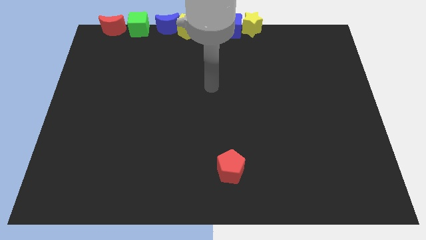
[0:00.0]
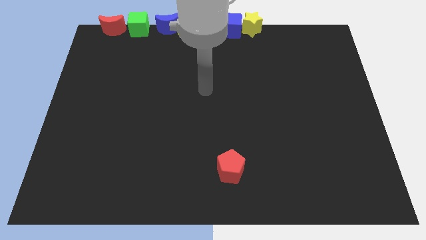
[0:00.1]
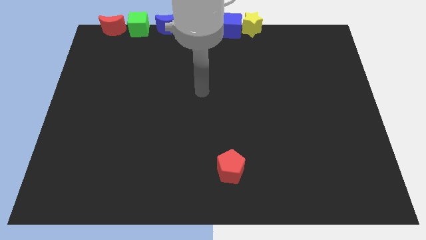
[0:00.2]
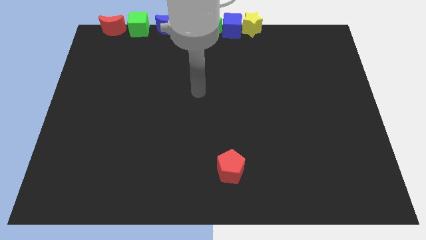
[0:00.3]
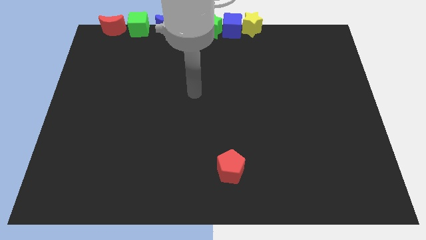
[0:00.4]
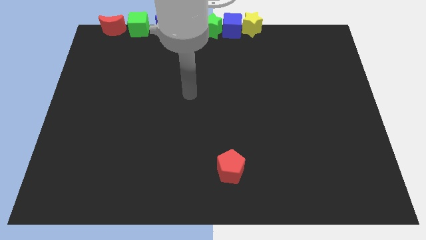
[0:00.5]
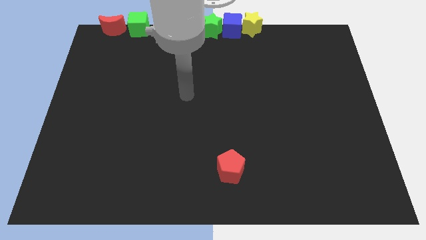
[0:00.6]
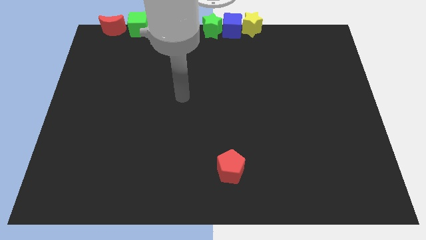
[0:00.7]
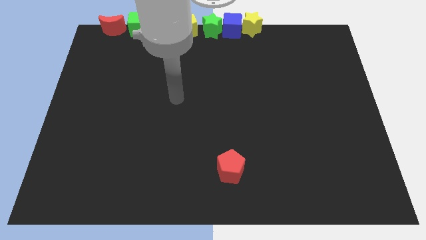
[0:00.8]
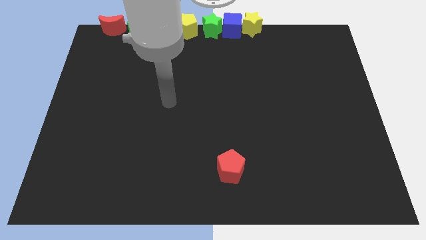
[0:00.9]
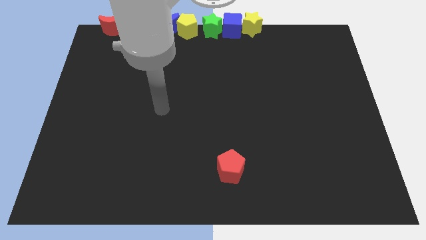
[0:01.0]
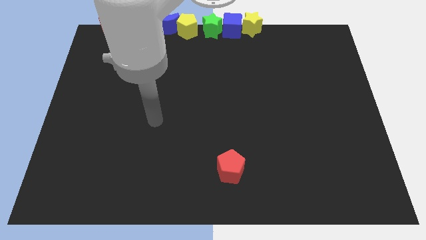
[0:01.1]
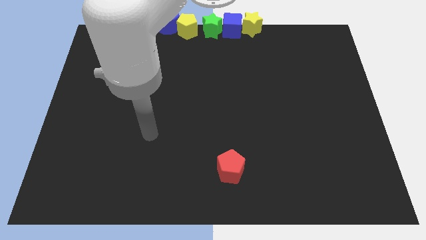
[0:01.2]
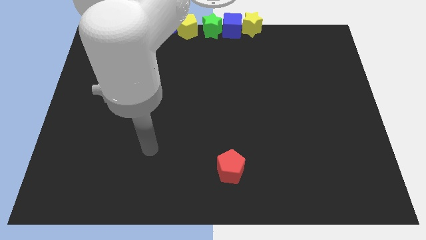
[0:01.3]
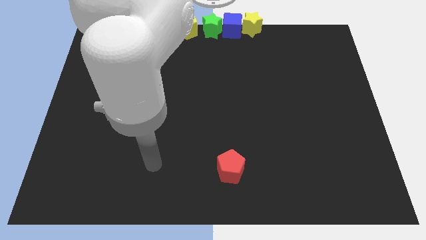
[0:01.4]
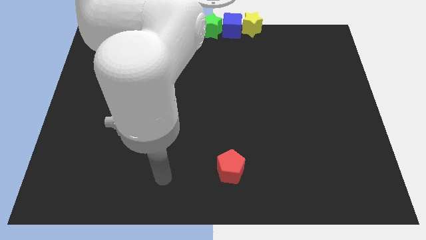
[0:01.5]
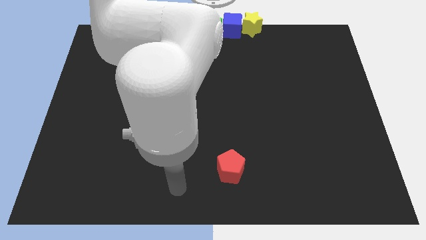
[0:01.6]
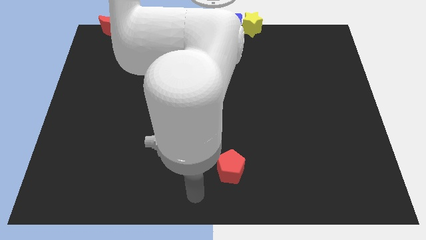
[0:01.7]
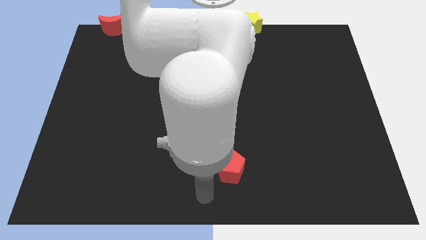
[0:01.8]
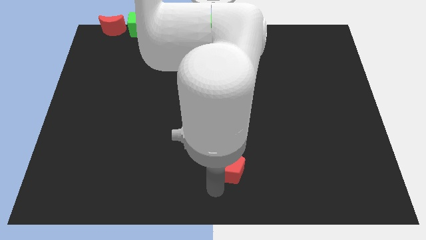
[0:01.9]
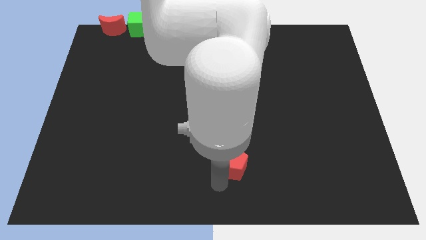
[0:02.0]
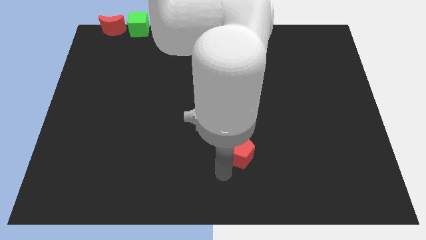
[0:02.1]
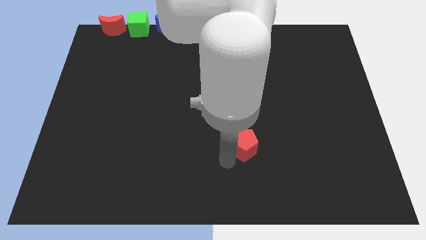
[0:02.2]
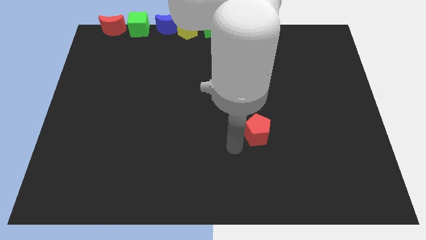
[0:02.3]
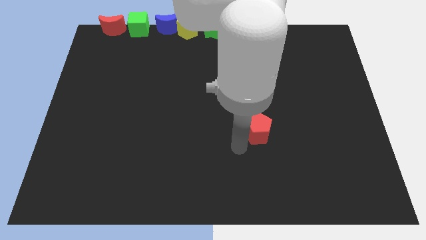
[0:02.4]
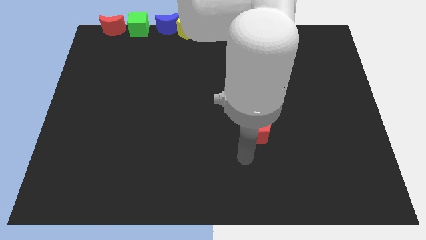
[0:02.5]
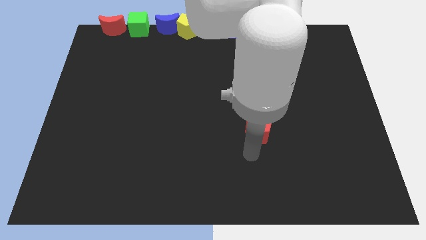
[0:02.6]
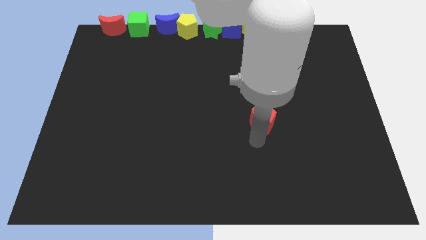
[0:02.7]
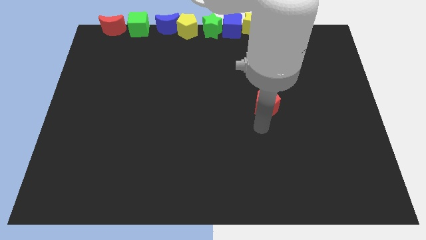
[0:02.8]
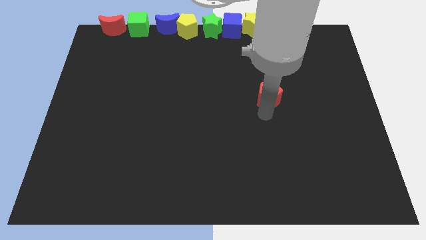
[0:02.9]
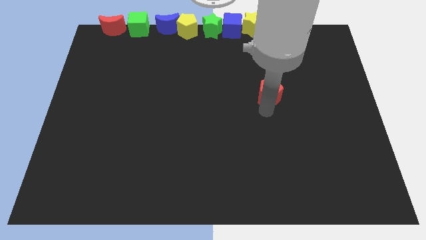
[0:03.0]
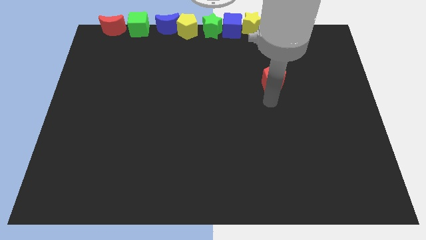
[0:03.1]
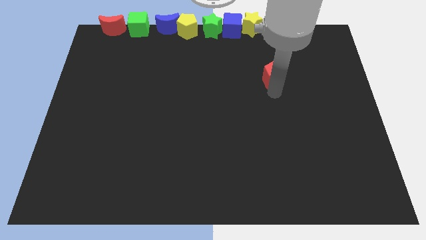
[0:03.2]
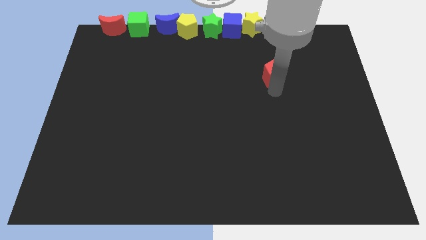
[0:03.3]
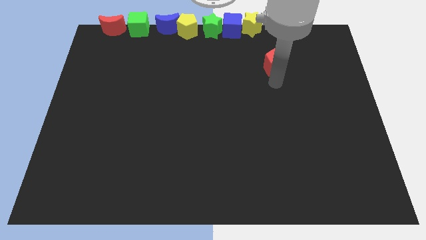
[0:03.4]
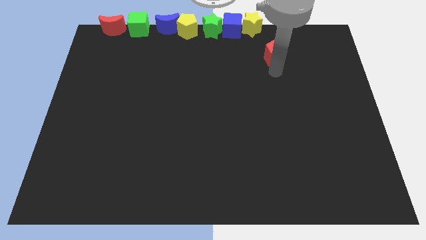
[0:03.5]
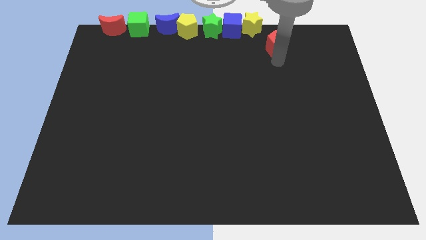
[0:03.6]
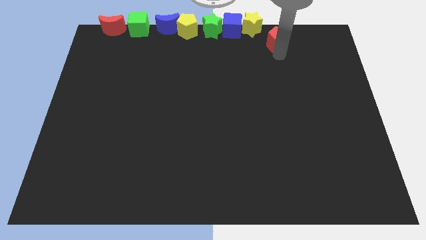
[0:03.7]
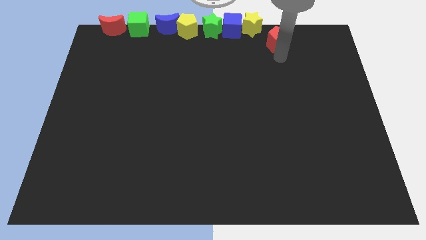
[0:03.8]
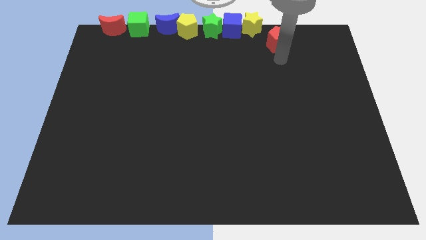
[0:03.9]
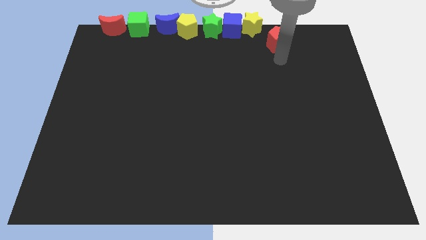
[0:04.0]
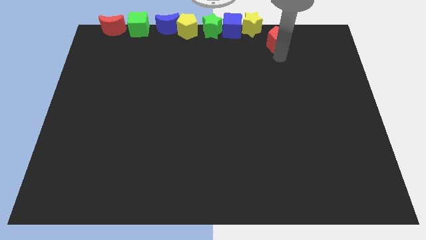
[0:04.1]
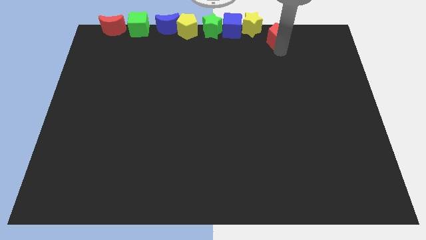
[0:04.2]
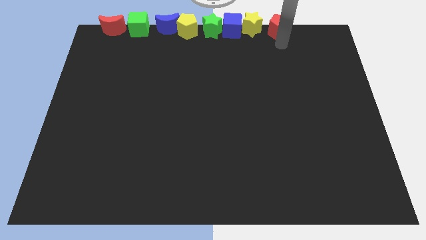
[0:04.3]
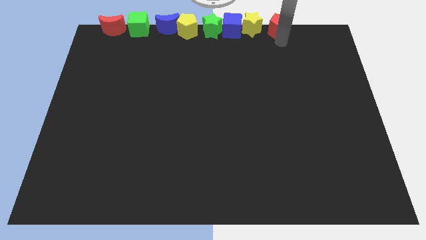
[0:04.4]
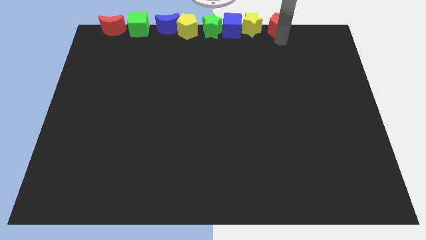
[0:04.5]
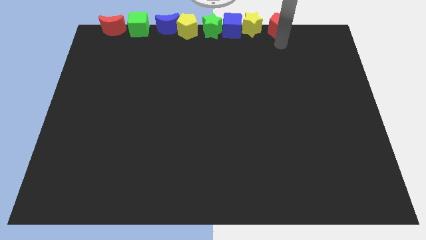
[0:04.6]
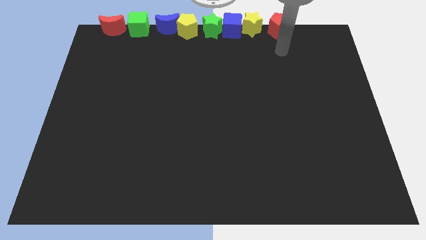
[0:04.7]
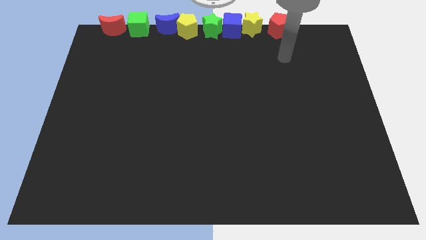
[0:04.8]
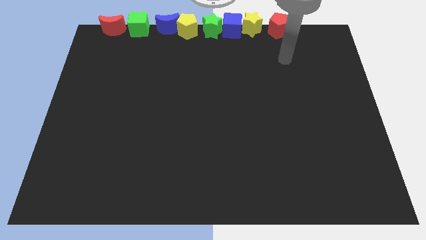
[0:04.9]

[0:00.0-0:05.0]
move the red pentagon to the right side of the yellow star

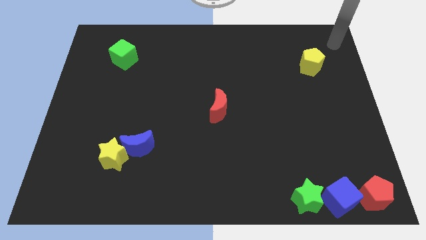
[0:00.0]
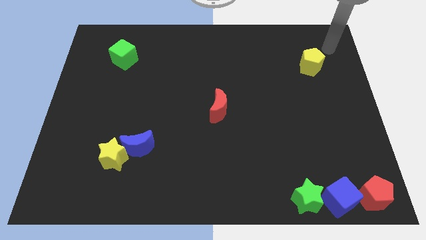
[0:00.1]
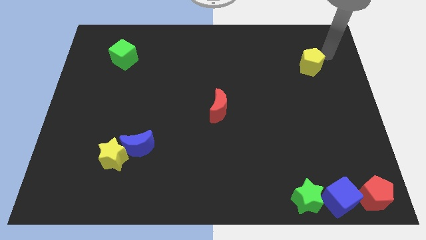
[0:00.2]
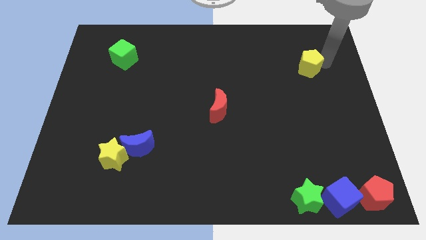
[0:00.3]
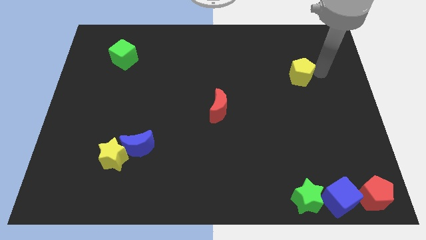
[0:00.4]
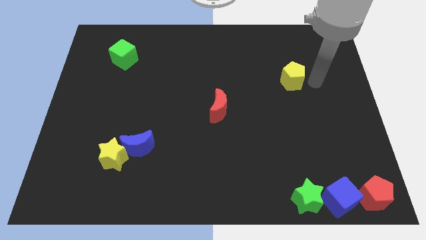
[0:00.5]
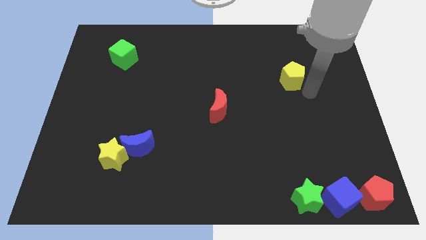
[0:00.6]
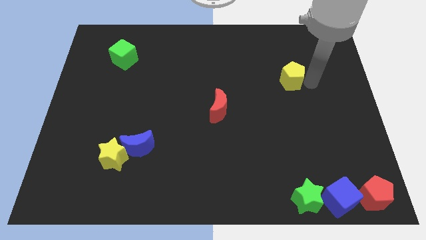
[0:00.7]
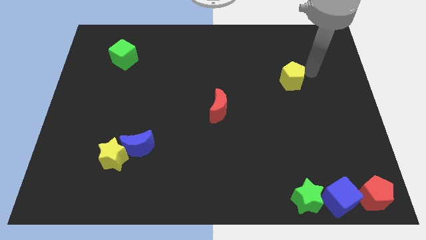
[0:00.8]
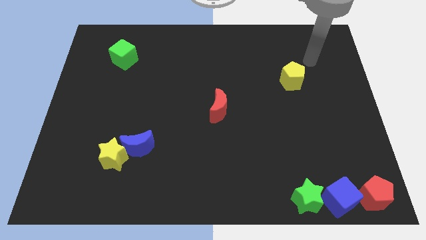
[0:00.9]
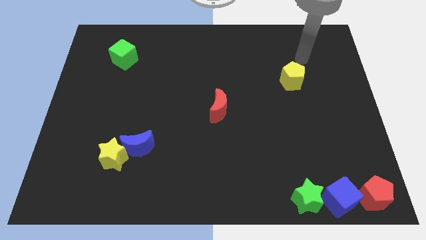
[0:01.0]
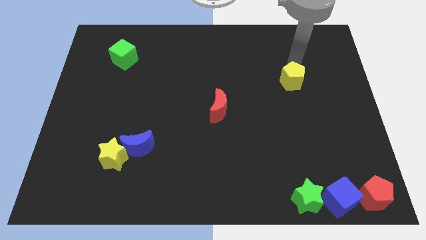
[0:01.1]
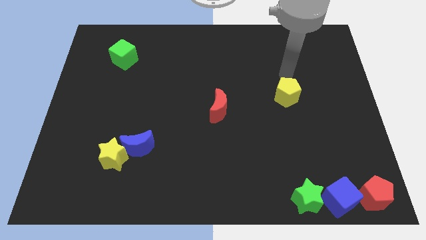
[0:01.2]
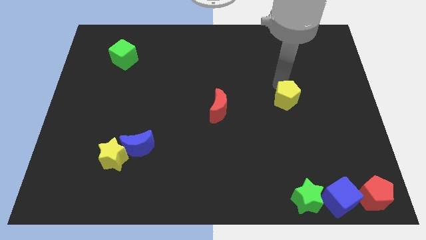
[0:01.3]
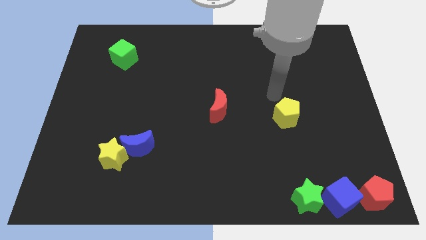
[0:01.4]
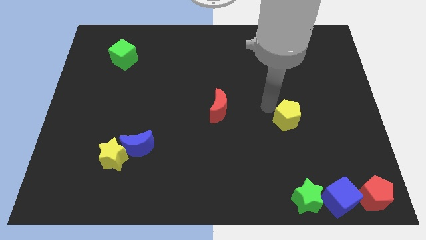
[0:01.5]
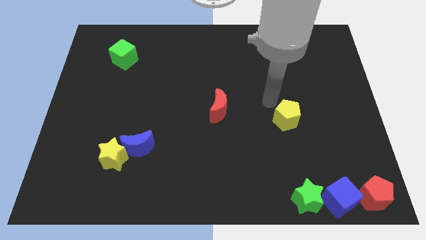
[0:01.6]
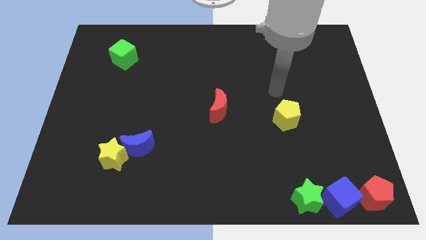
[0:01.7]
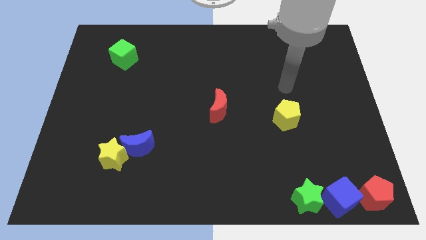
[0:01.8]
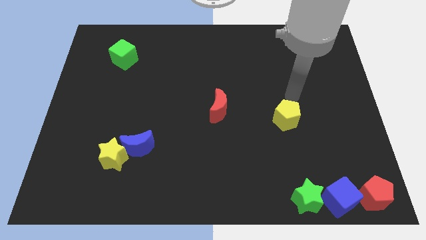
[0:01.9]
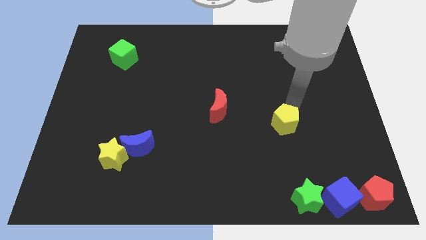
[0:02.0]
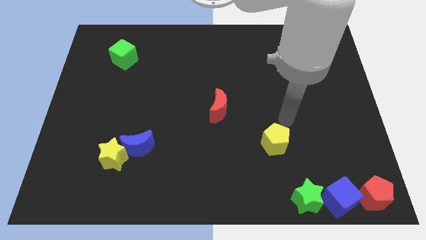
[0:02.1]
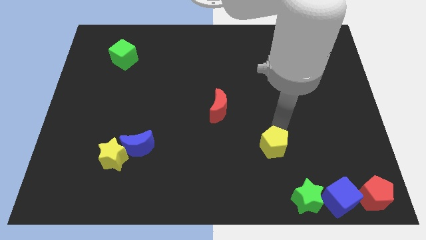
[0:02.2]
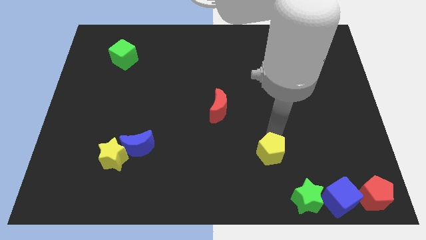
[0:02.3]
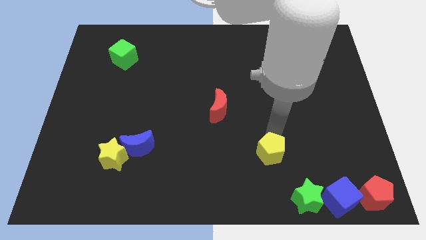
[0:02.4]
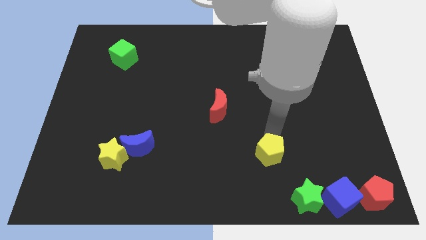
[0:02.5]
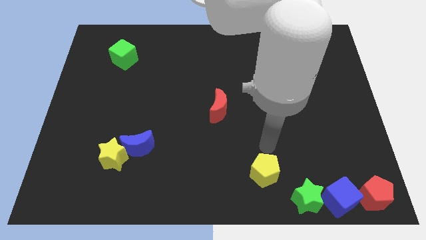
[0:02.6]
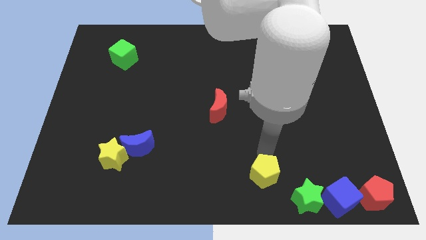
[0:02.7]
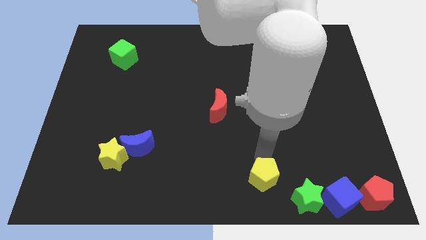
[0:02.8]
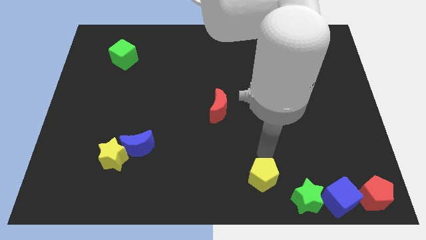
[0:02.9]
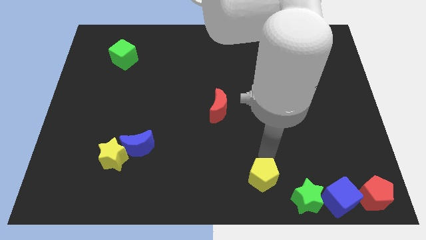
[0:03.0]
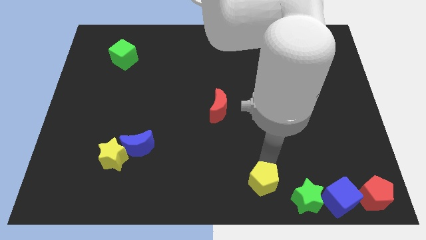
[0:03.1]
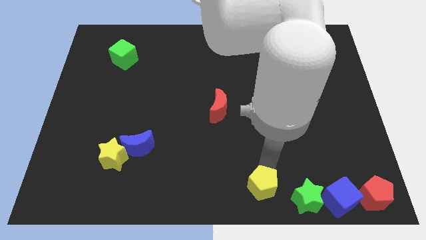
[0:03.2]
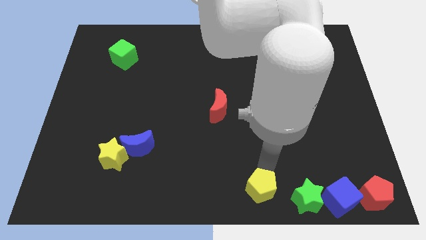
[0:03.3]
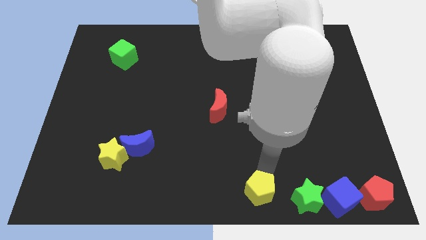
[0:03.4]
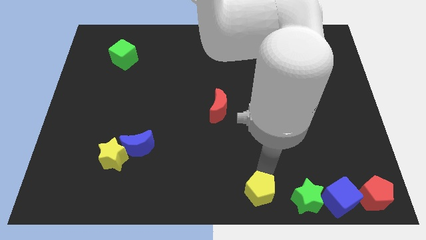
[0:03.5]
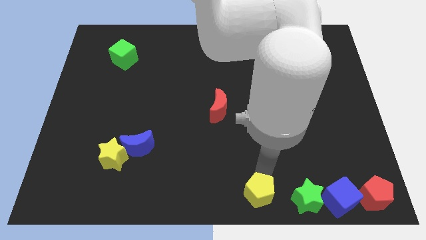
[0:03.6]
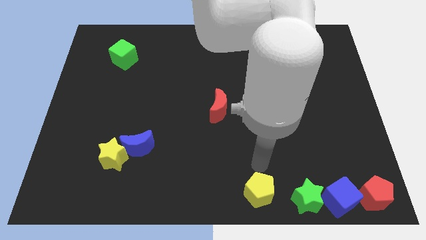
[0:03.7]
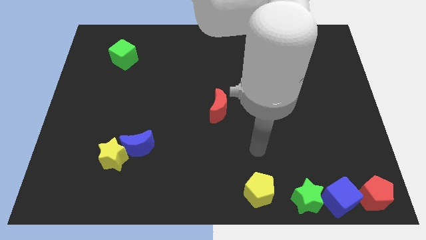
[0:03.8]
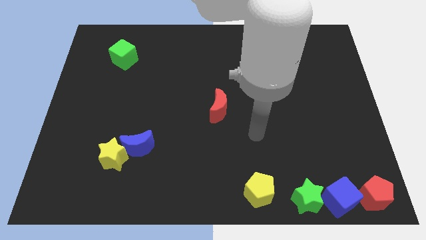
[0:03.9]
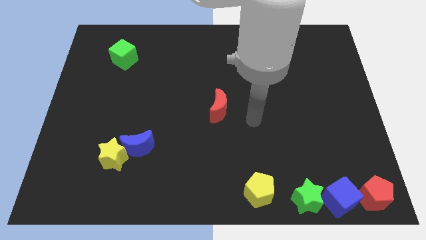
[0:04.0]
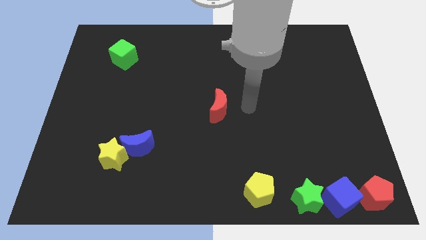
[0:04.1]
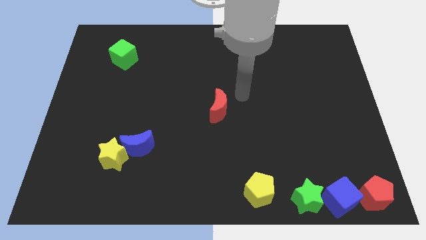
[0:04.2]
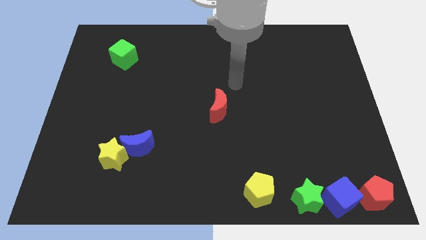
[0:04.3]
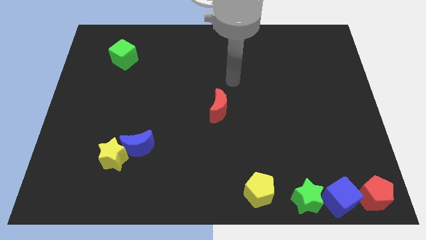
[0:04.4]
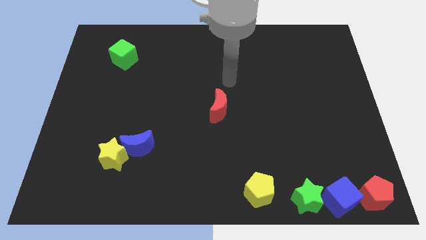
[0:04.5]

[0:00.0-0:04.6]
place the yellow pentagon left to green star
